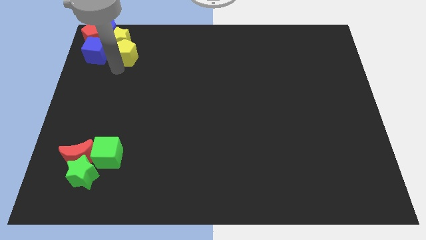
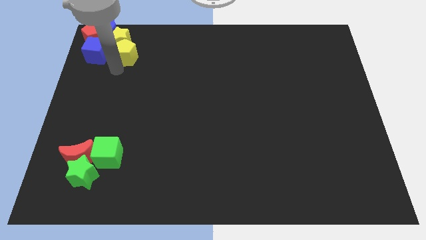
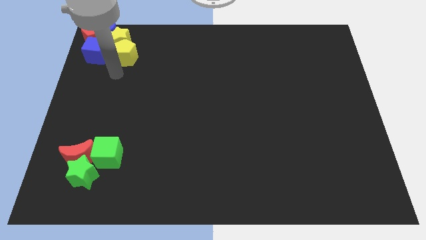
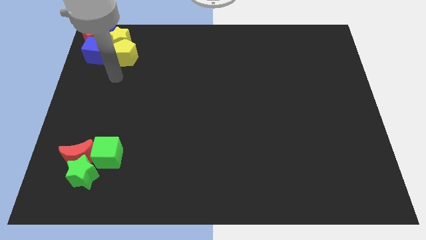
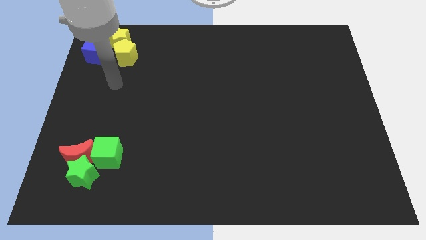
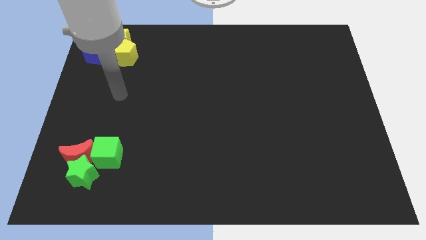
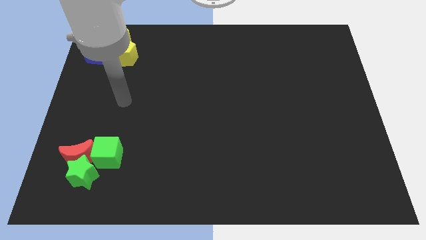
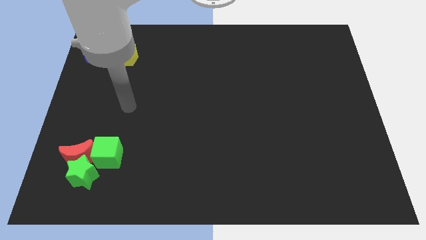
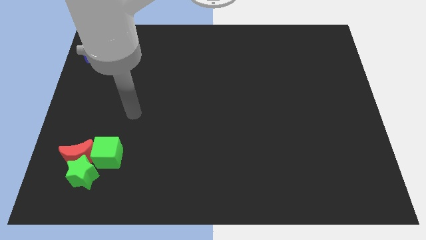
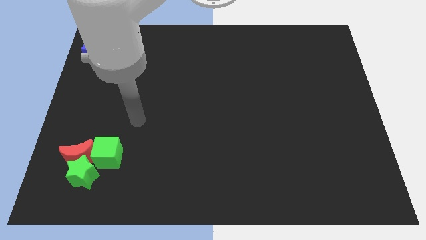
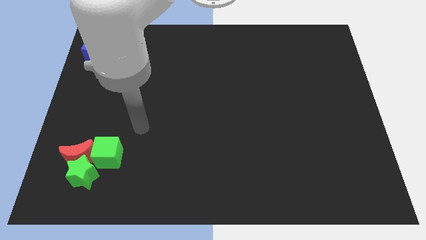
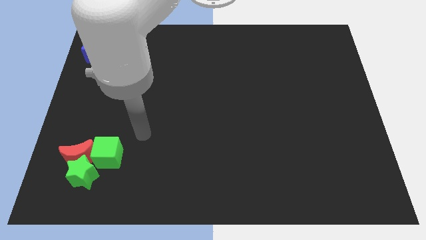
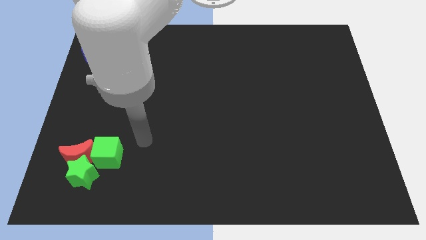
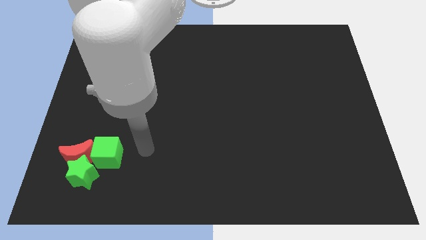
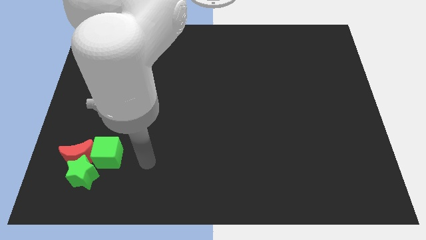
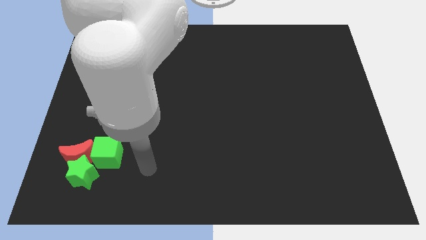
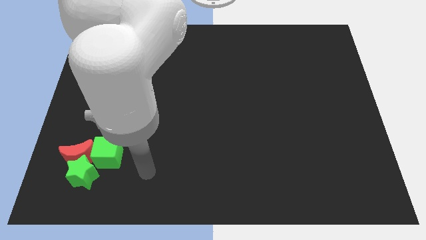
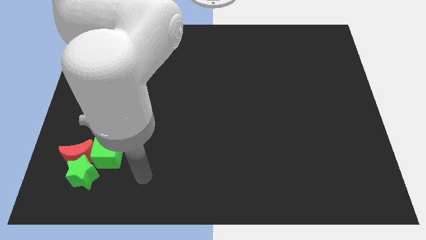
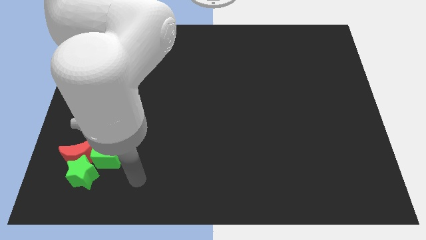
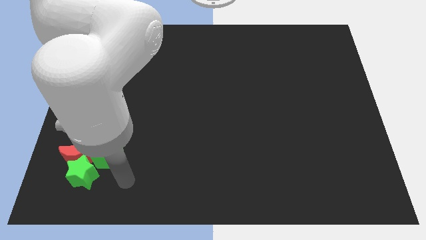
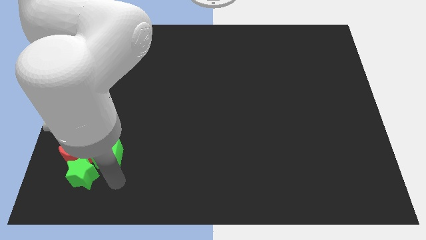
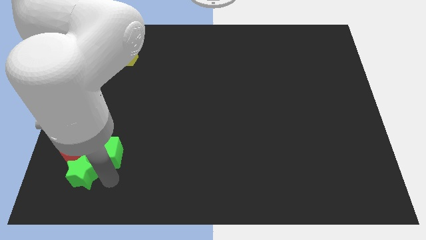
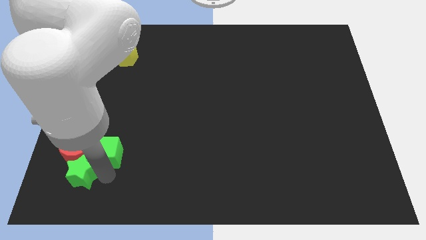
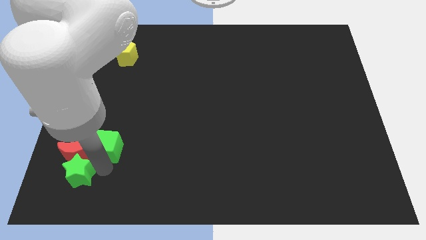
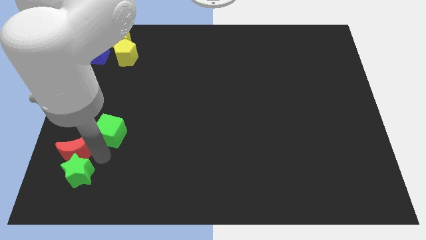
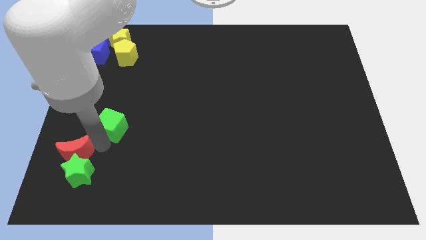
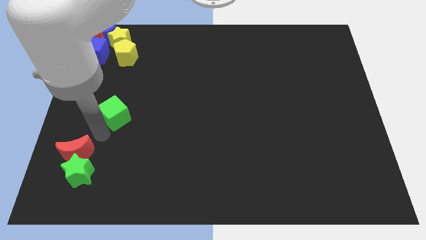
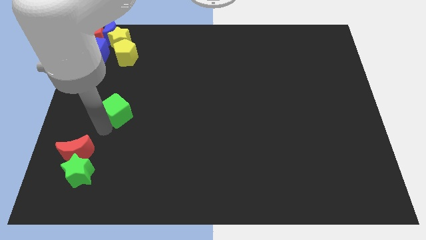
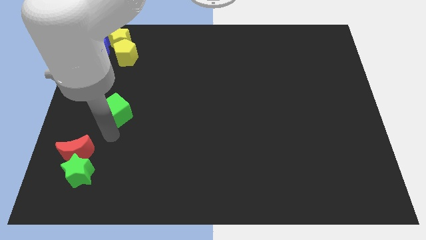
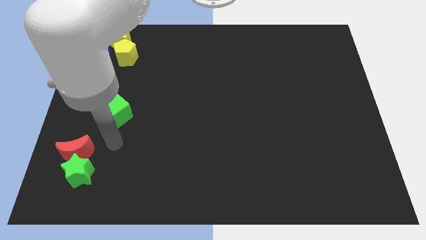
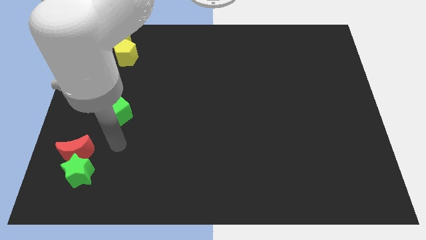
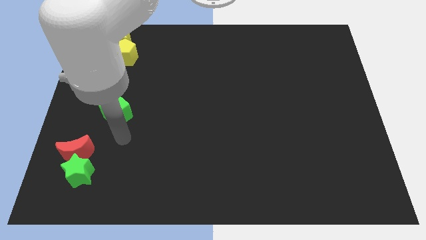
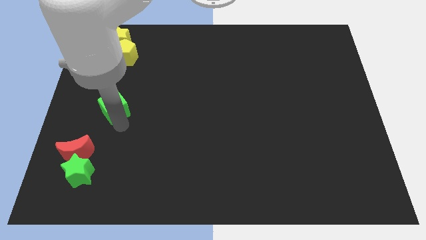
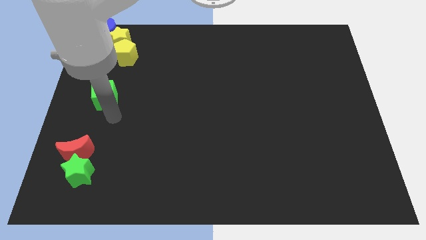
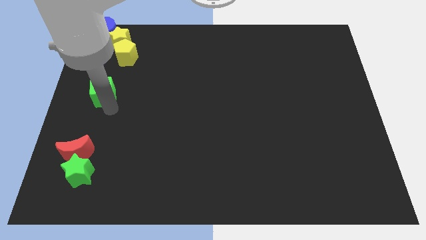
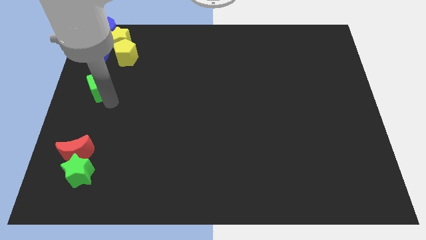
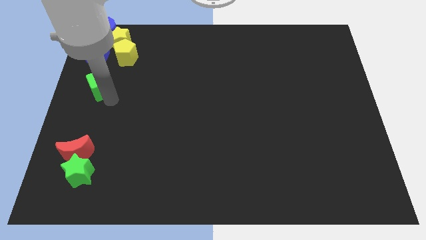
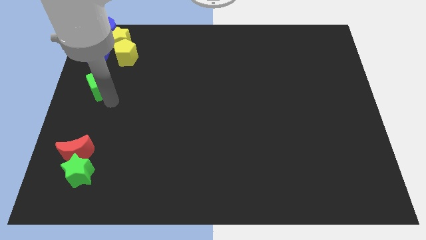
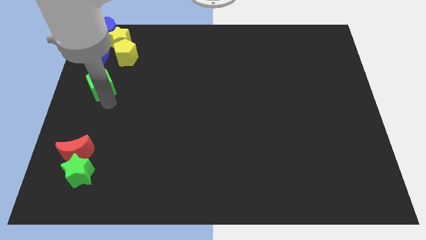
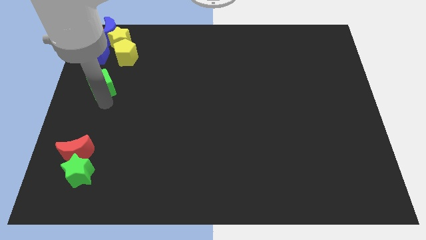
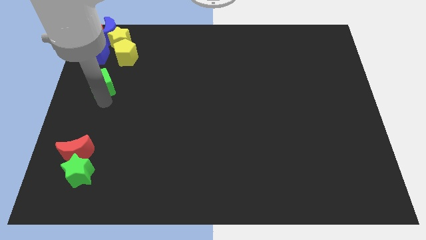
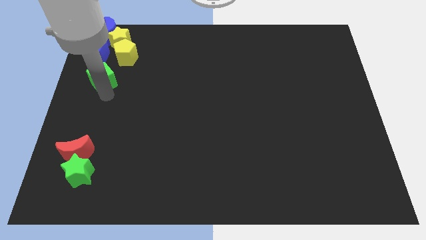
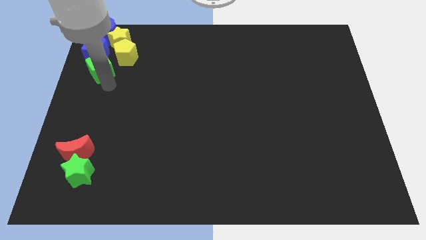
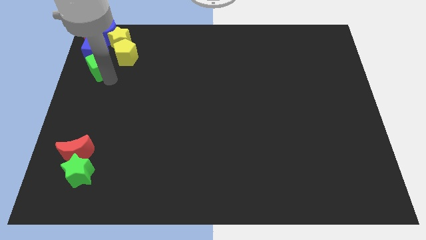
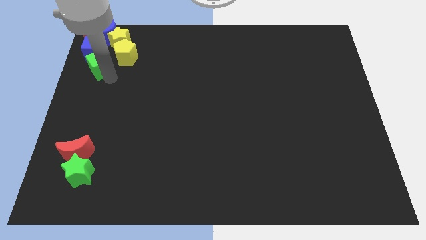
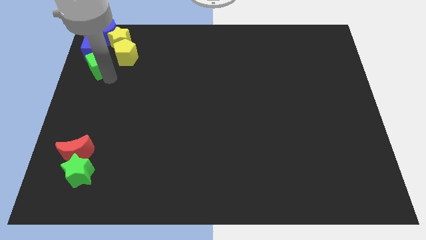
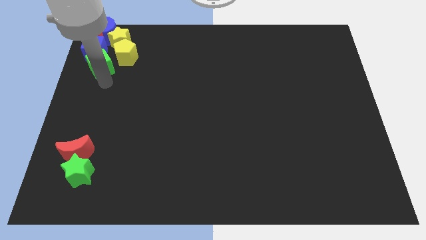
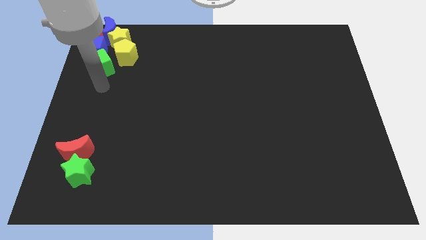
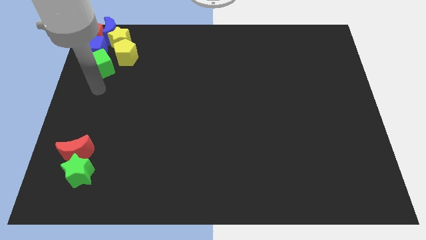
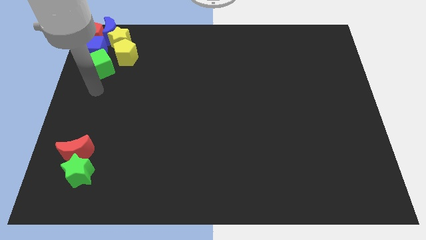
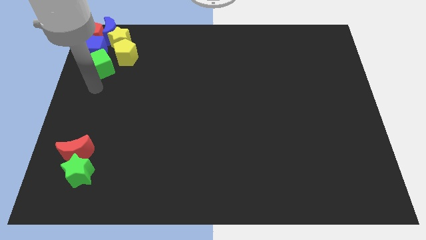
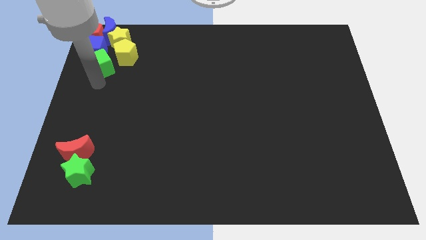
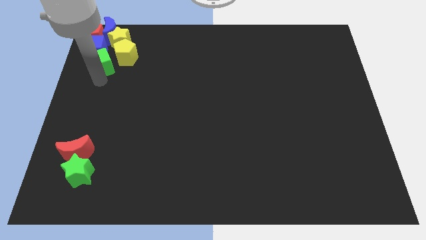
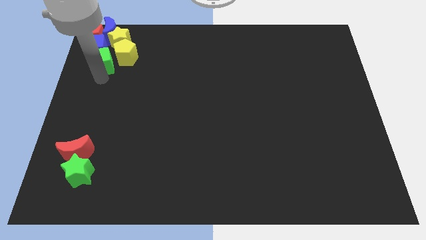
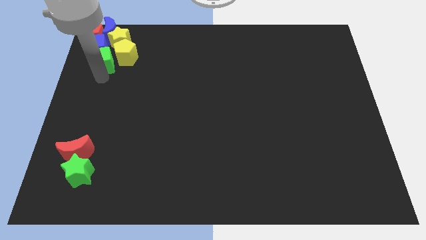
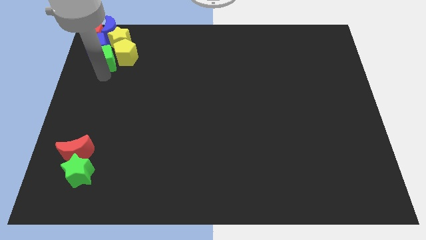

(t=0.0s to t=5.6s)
put the green cube at the bottom of the blue cube to form a line with red pentagon and blue cube

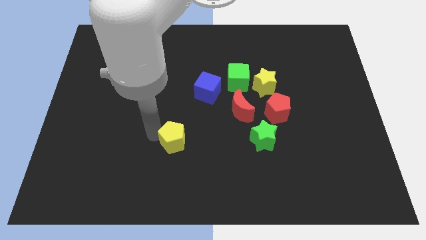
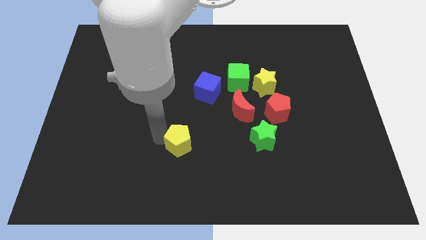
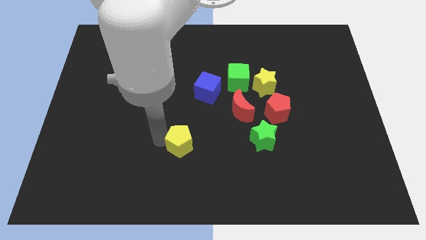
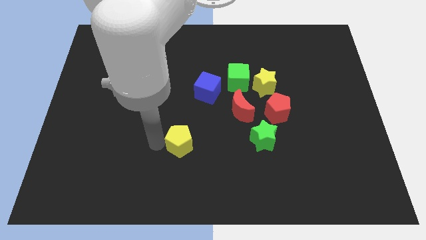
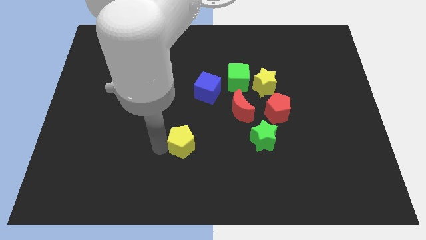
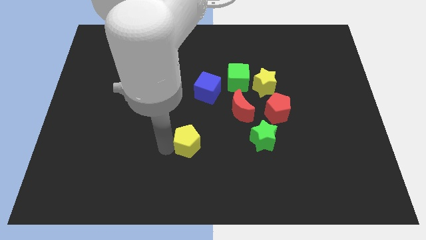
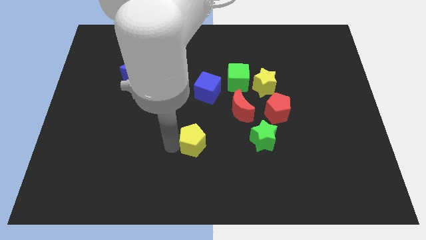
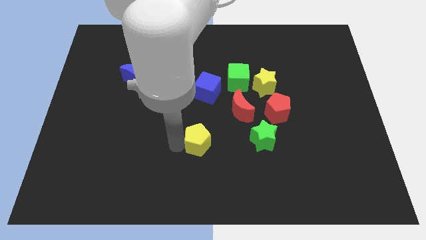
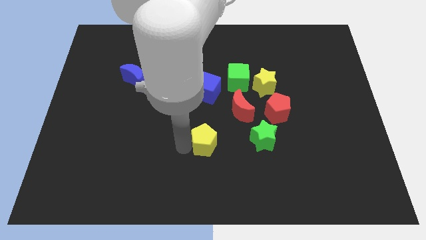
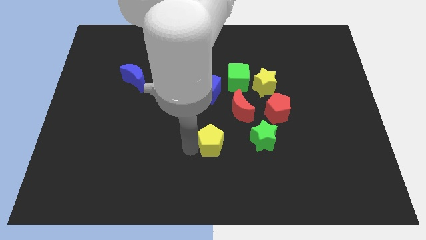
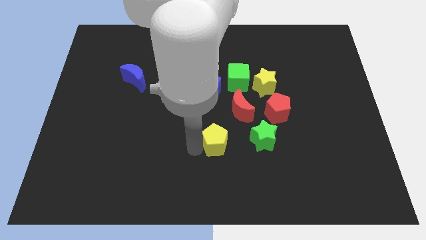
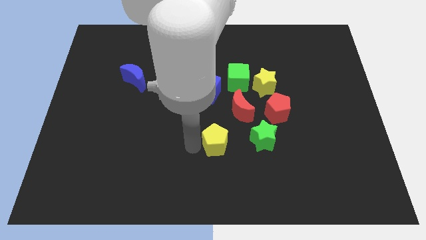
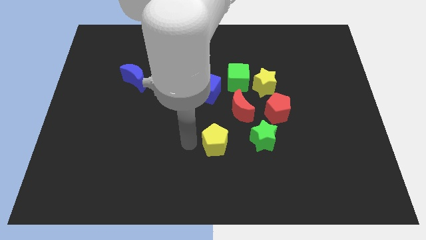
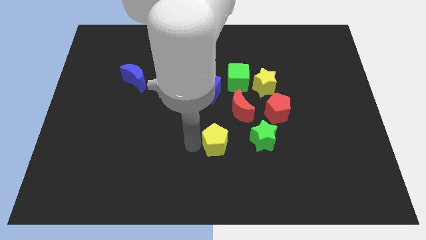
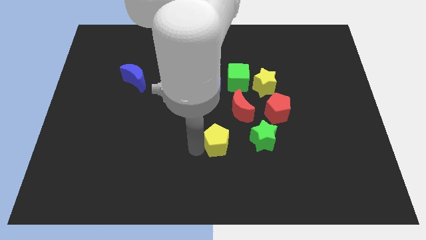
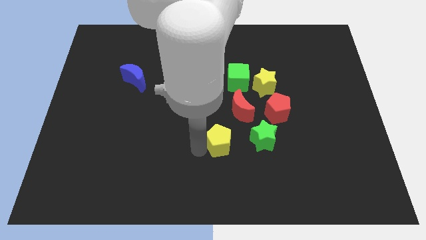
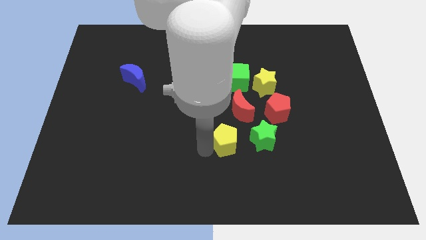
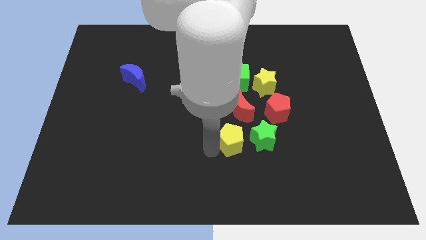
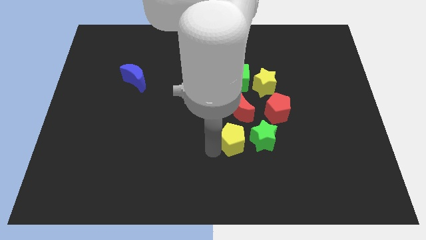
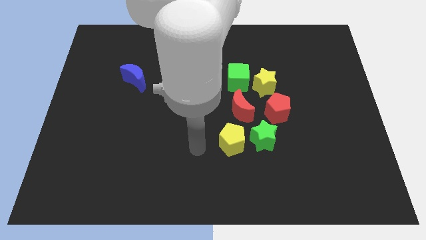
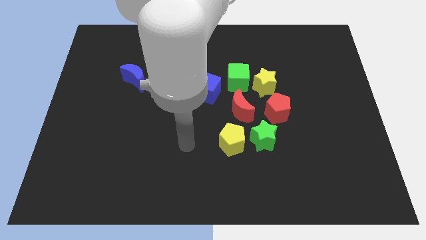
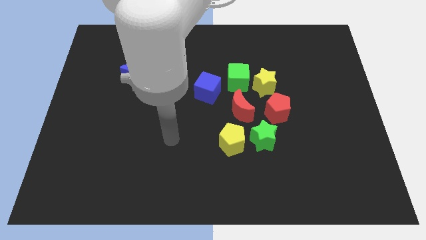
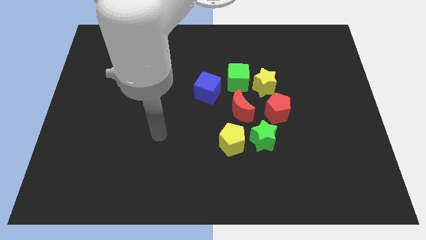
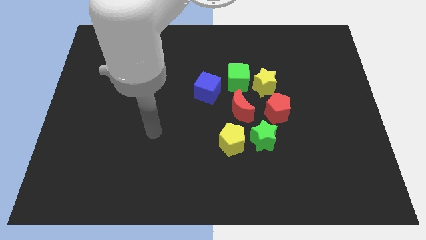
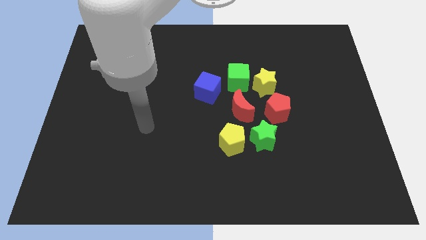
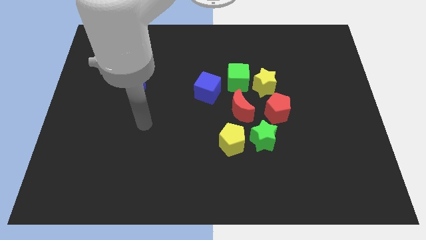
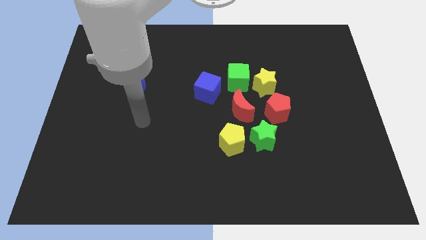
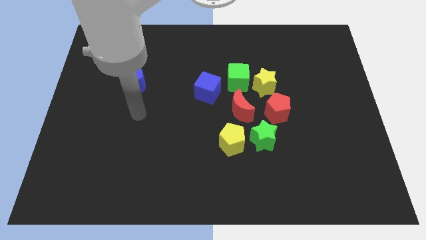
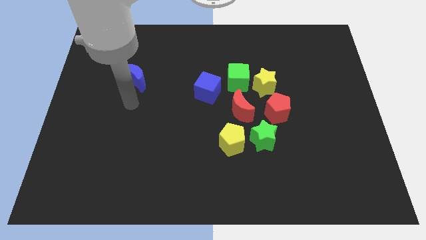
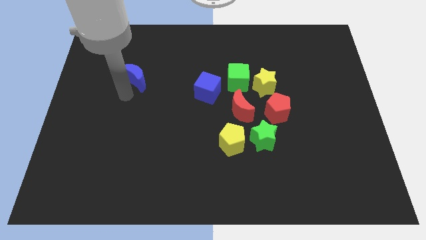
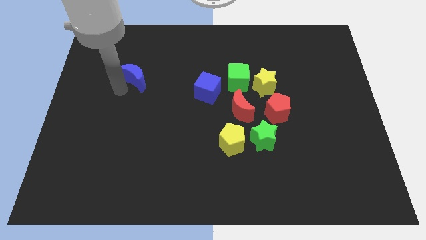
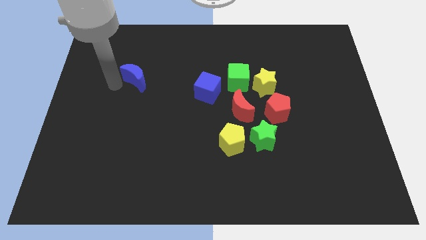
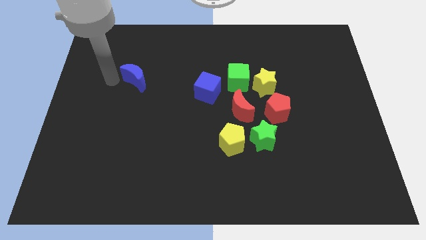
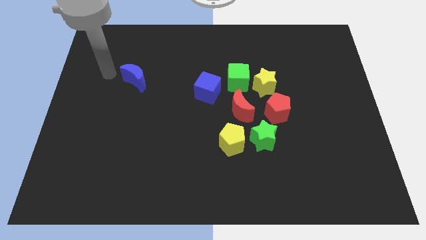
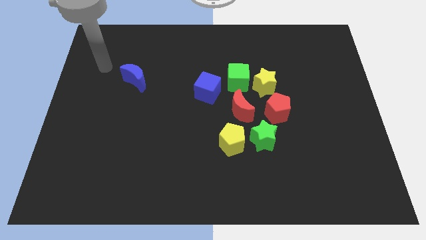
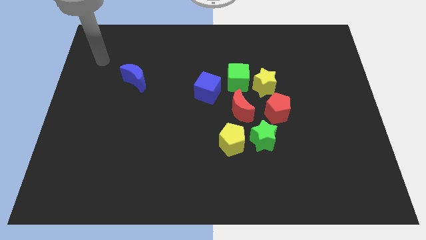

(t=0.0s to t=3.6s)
move the yellow pentagon left to the green star
